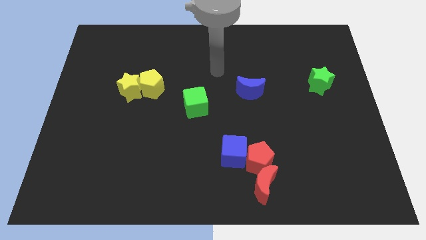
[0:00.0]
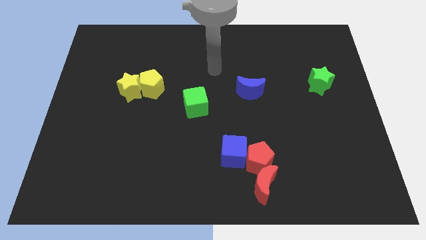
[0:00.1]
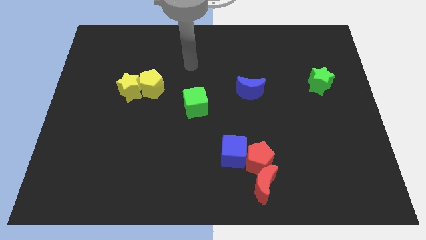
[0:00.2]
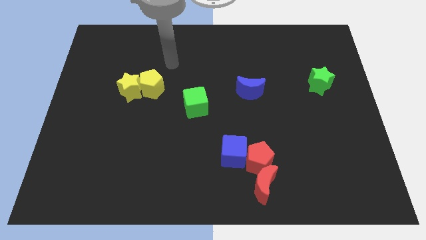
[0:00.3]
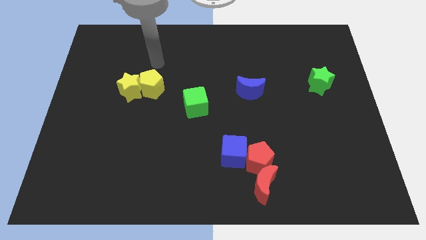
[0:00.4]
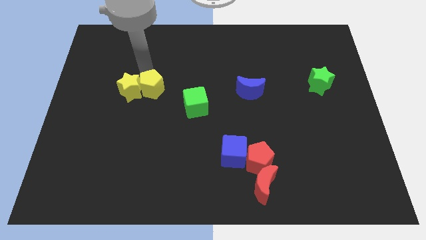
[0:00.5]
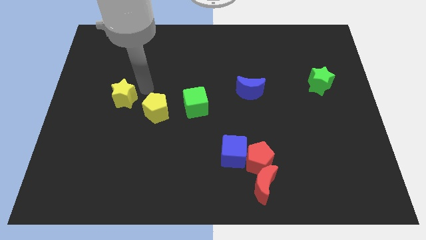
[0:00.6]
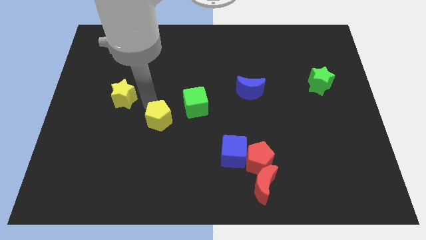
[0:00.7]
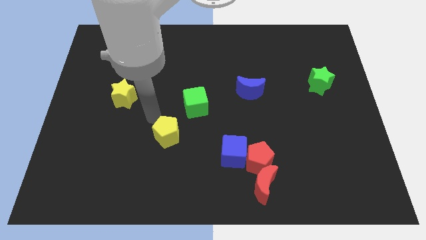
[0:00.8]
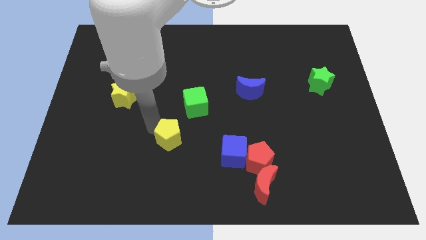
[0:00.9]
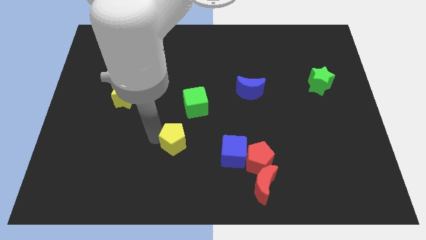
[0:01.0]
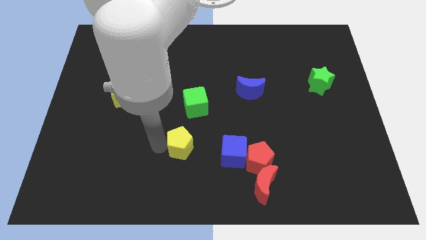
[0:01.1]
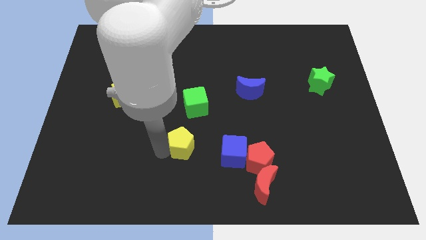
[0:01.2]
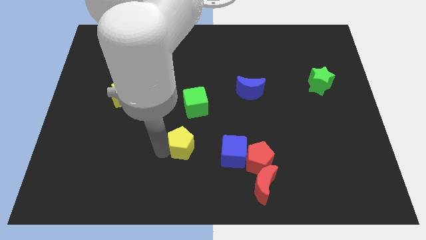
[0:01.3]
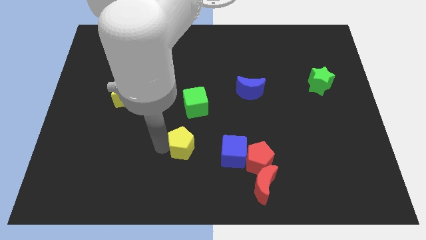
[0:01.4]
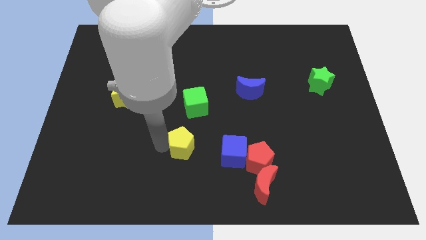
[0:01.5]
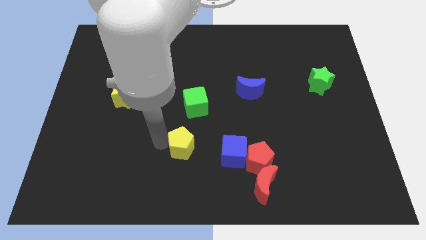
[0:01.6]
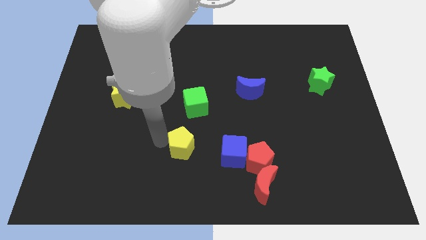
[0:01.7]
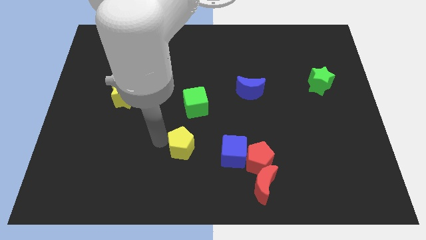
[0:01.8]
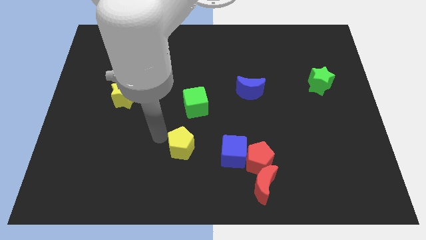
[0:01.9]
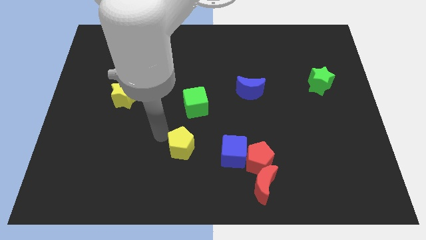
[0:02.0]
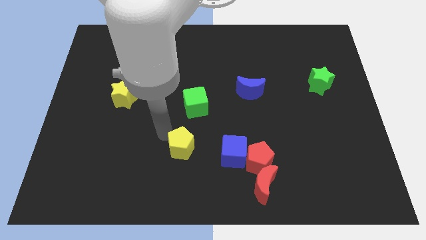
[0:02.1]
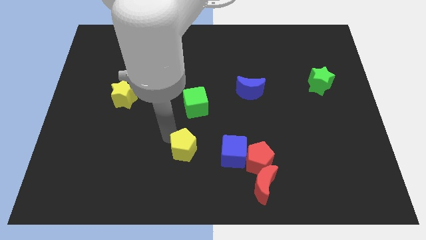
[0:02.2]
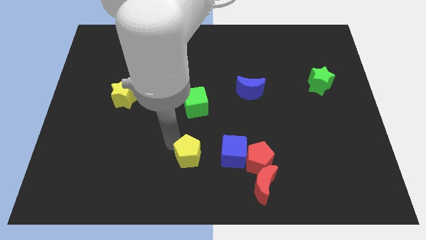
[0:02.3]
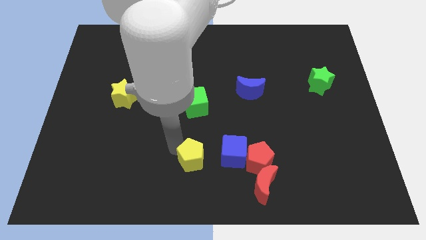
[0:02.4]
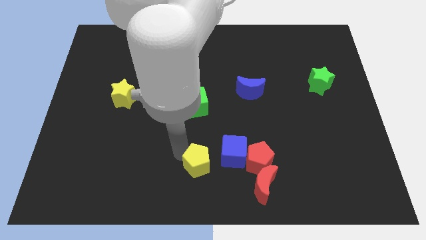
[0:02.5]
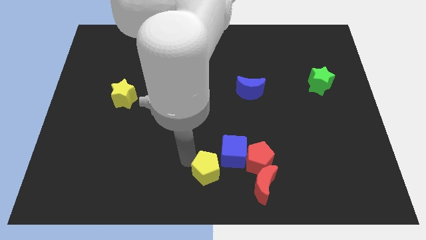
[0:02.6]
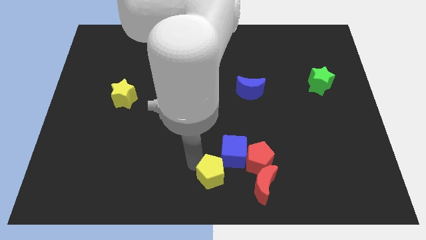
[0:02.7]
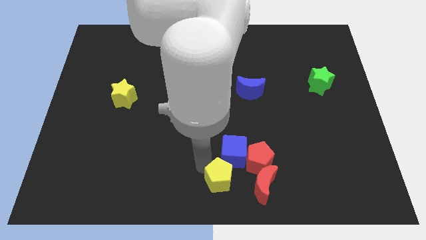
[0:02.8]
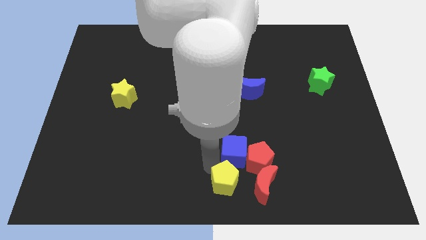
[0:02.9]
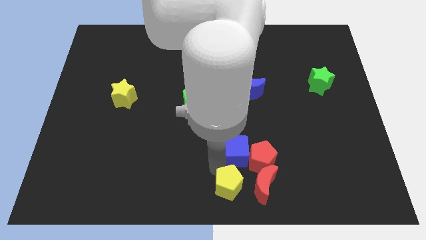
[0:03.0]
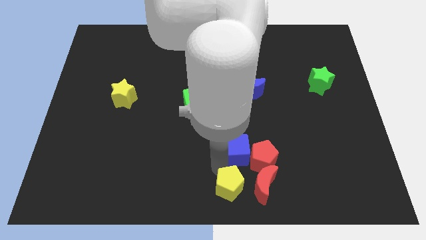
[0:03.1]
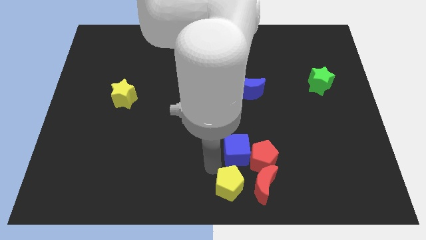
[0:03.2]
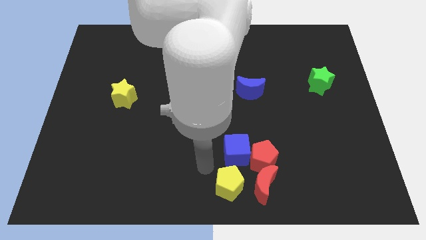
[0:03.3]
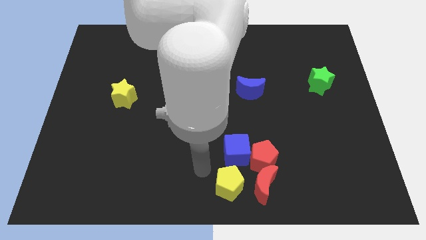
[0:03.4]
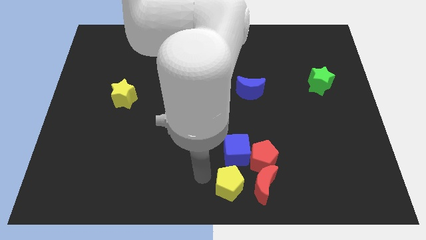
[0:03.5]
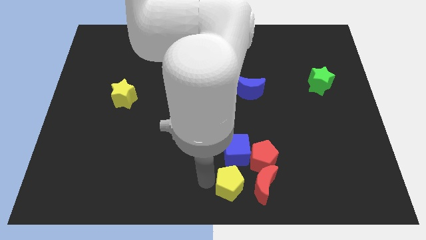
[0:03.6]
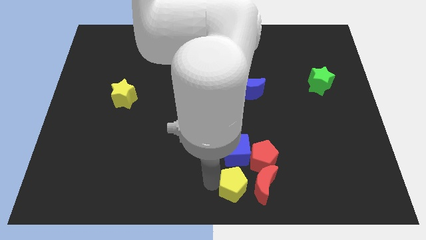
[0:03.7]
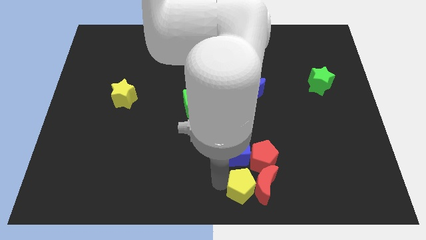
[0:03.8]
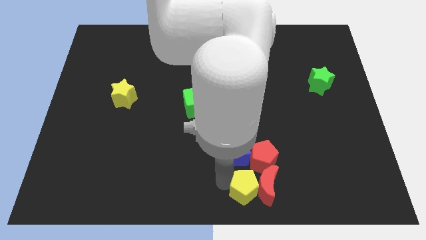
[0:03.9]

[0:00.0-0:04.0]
push the yellow pentagon towards the red moon

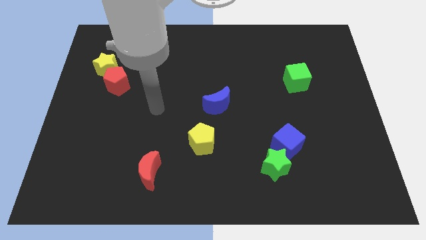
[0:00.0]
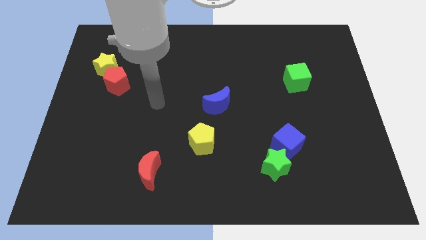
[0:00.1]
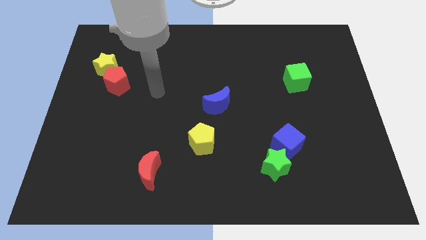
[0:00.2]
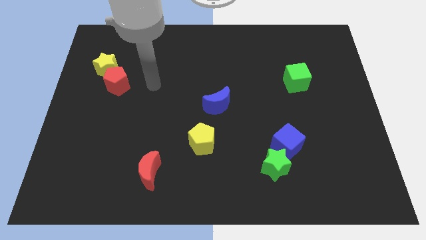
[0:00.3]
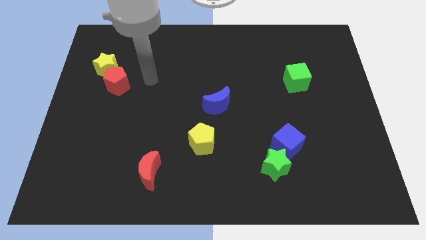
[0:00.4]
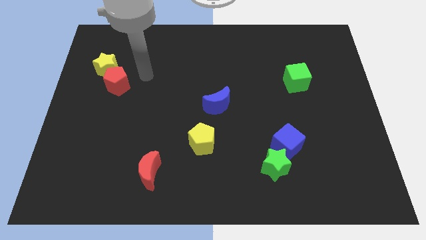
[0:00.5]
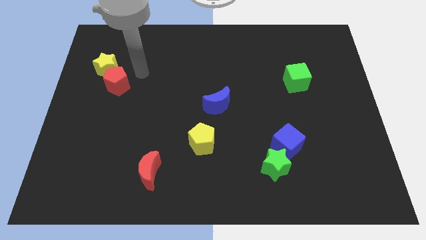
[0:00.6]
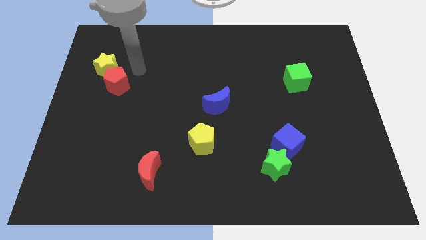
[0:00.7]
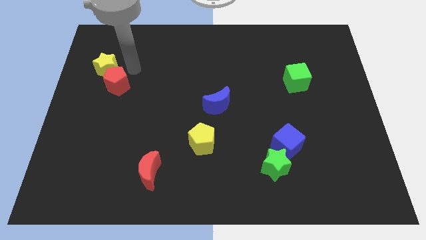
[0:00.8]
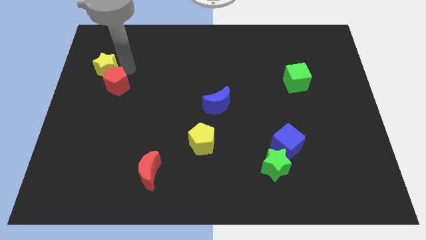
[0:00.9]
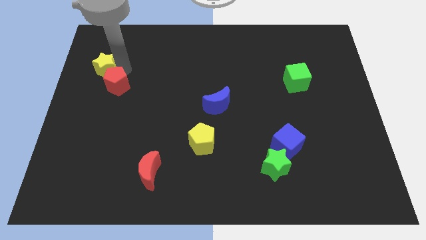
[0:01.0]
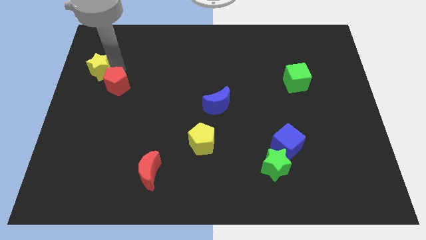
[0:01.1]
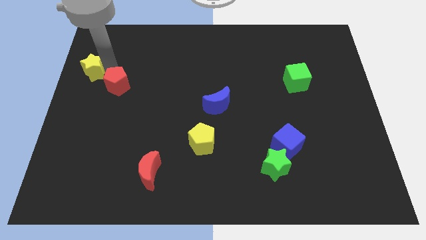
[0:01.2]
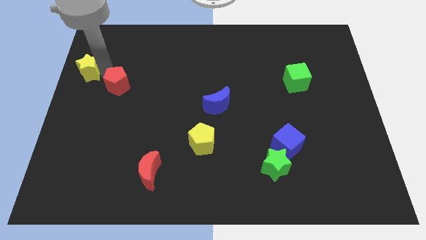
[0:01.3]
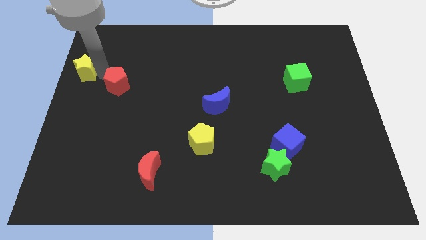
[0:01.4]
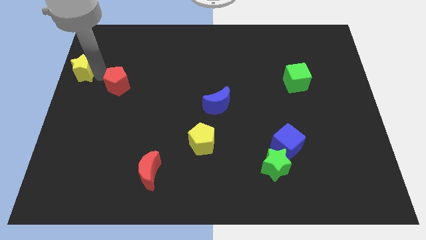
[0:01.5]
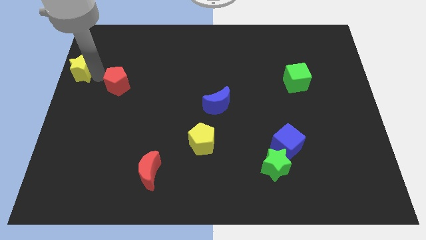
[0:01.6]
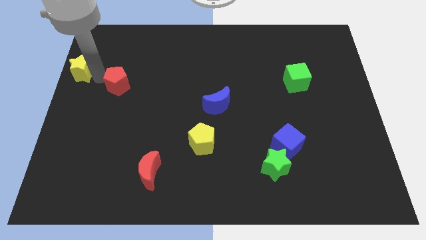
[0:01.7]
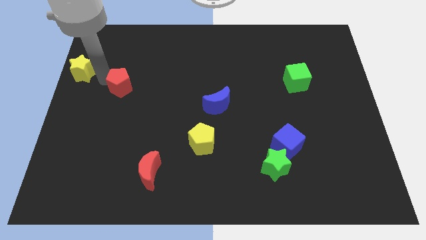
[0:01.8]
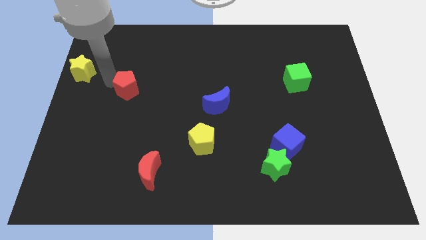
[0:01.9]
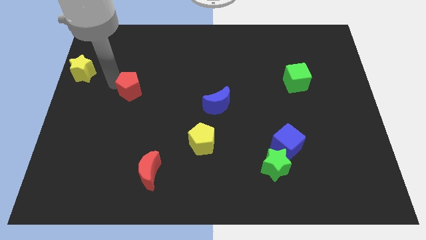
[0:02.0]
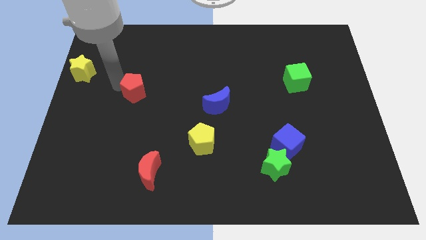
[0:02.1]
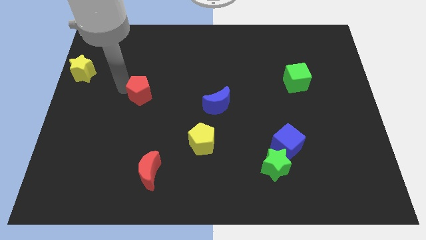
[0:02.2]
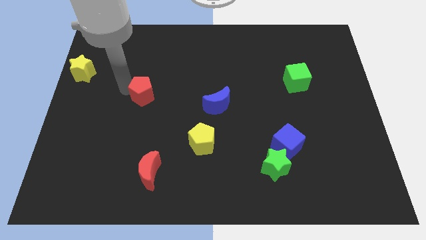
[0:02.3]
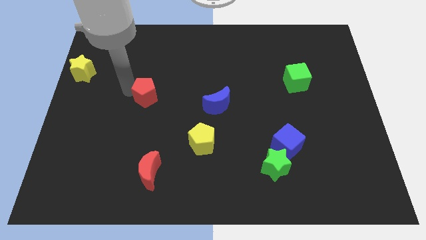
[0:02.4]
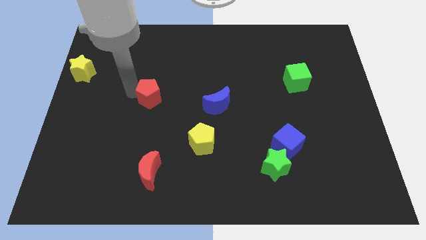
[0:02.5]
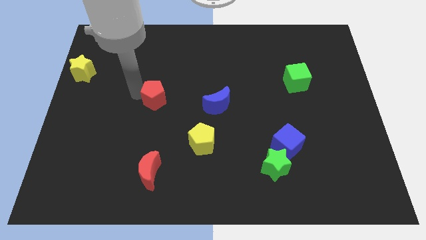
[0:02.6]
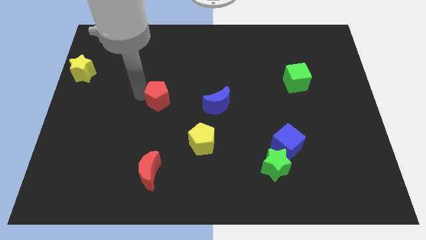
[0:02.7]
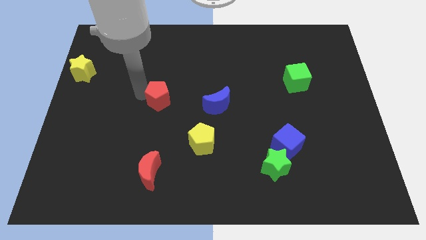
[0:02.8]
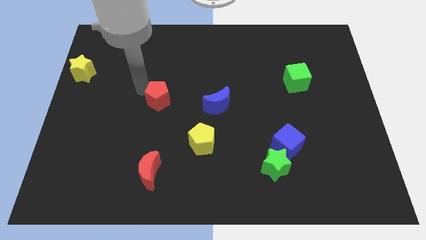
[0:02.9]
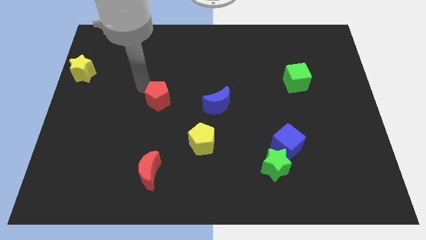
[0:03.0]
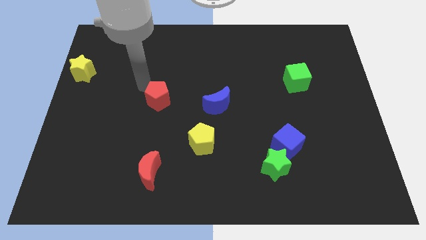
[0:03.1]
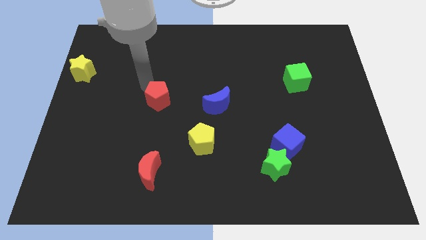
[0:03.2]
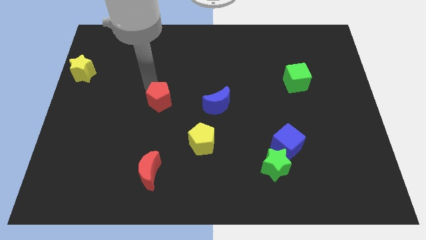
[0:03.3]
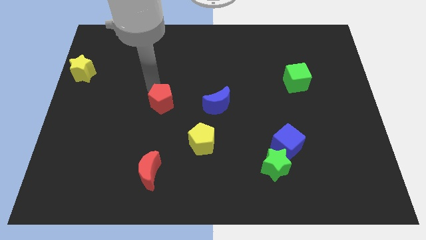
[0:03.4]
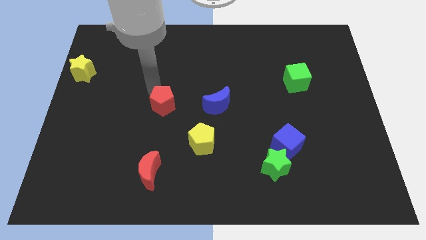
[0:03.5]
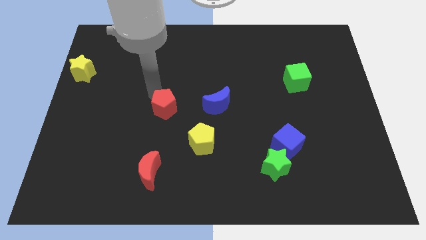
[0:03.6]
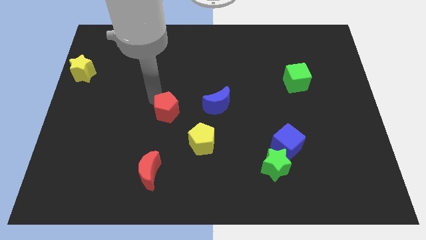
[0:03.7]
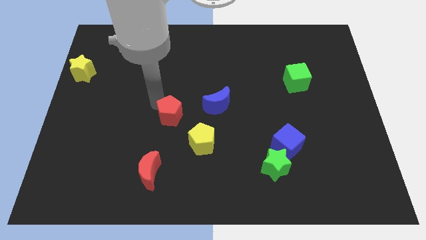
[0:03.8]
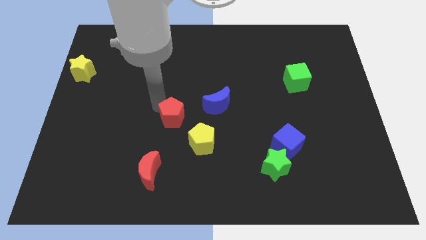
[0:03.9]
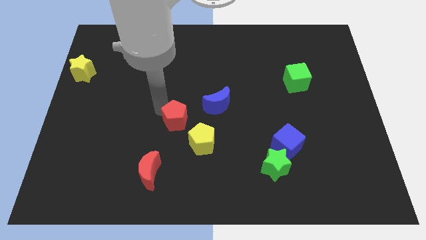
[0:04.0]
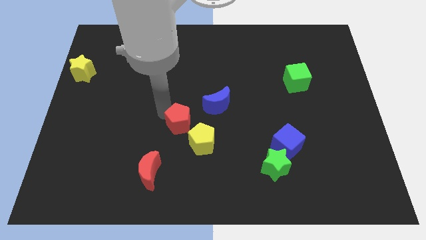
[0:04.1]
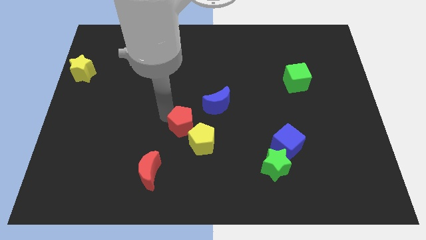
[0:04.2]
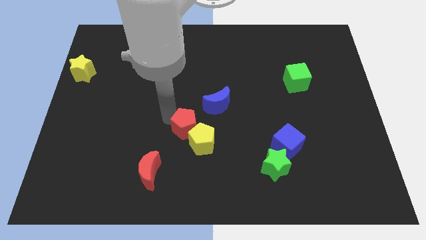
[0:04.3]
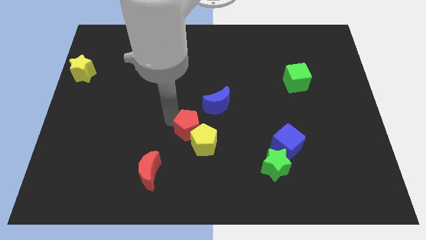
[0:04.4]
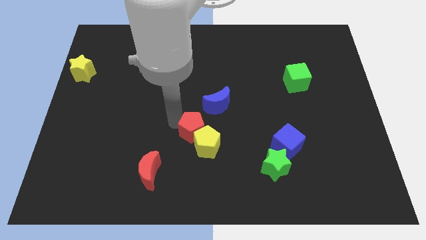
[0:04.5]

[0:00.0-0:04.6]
move the red pentagon to the yellow pentagon

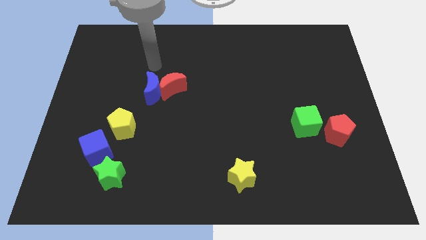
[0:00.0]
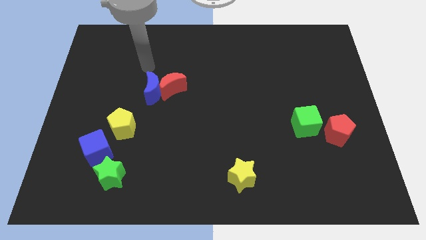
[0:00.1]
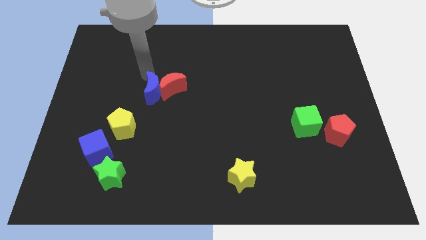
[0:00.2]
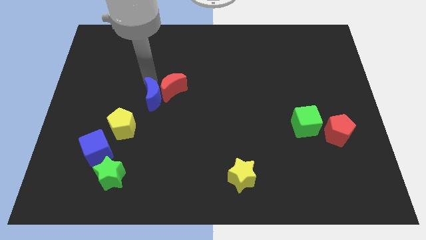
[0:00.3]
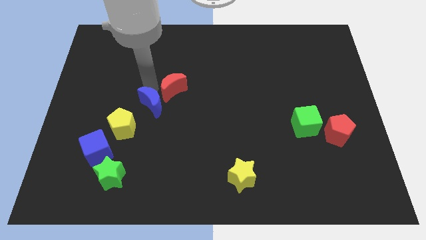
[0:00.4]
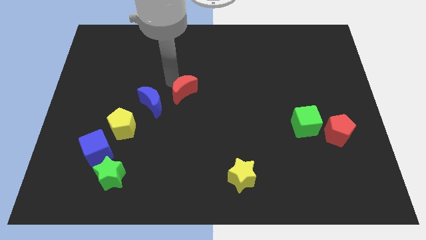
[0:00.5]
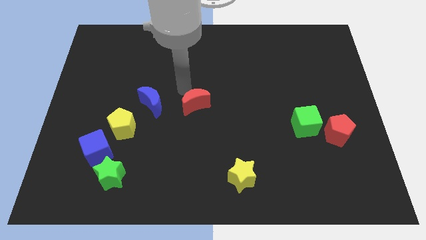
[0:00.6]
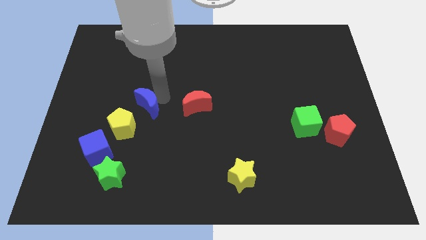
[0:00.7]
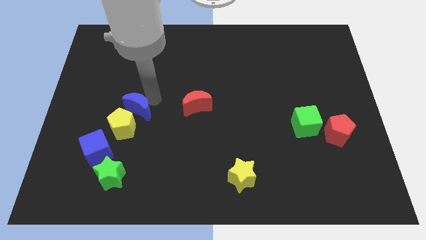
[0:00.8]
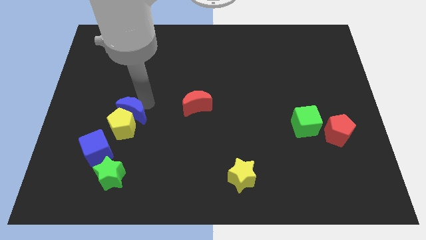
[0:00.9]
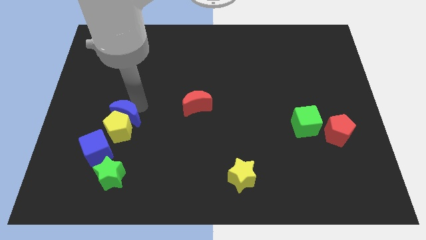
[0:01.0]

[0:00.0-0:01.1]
push the blue moon to the yellow pentagon
